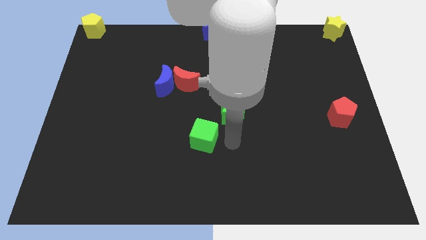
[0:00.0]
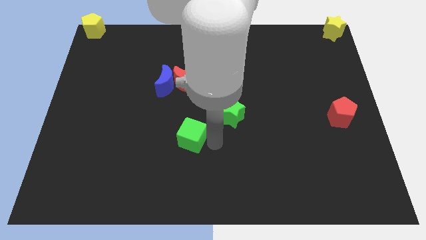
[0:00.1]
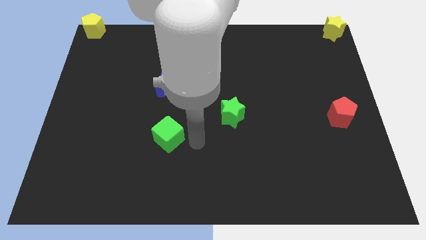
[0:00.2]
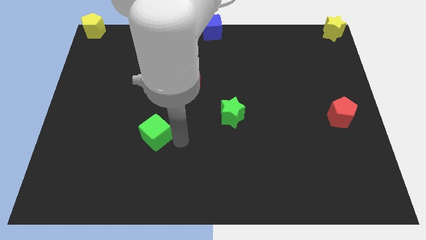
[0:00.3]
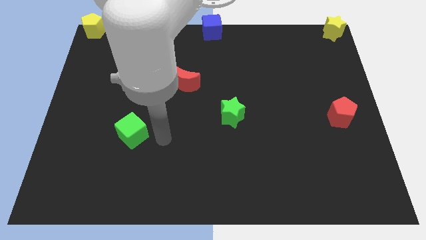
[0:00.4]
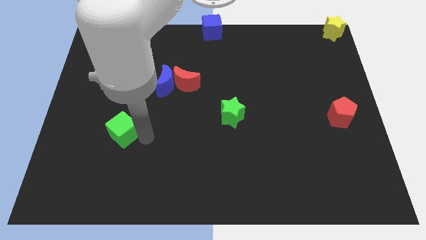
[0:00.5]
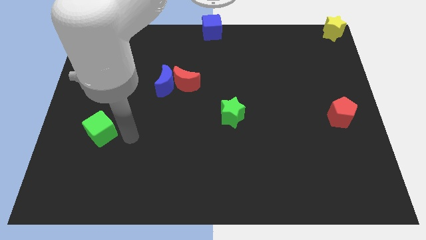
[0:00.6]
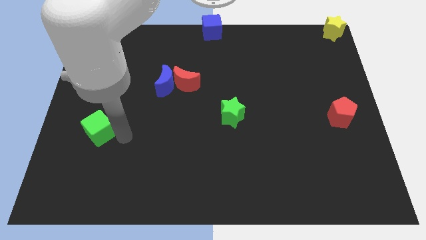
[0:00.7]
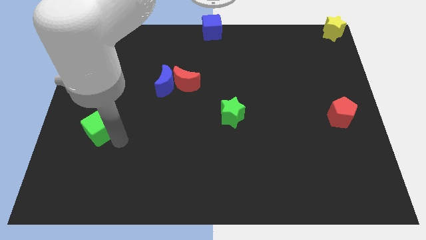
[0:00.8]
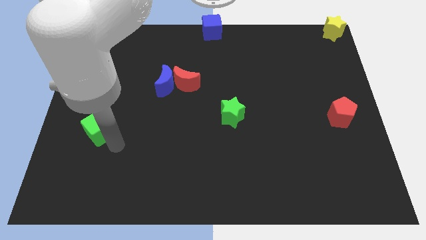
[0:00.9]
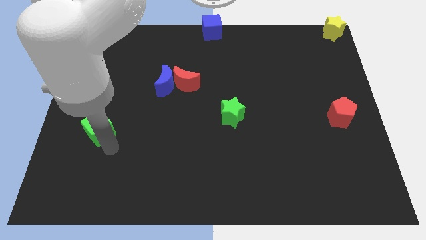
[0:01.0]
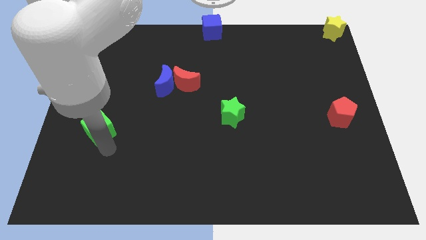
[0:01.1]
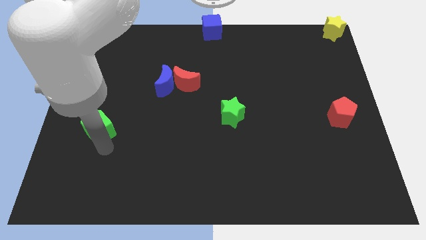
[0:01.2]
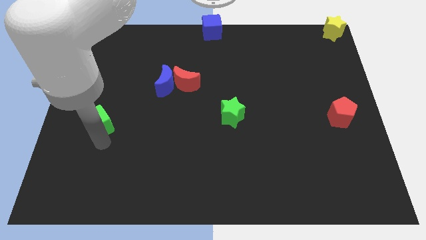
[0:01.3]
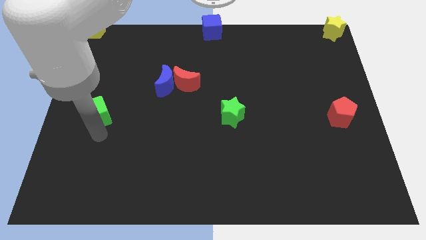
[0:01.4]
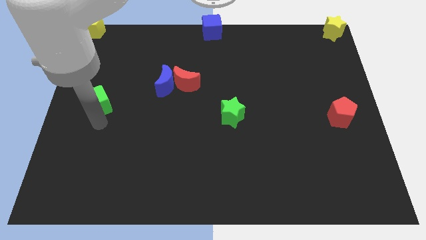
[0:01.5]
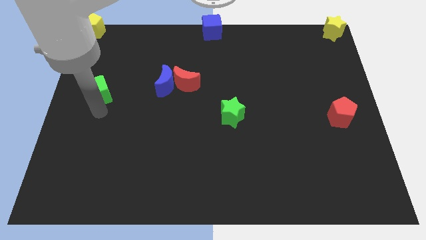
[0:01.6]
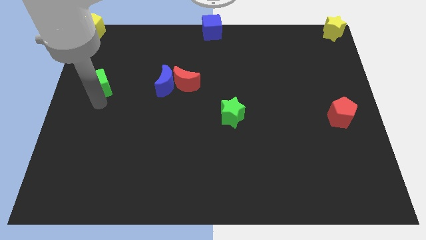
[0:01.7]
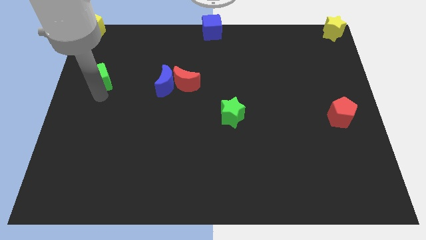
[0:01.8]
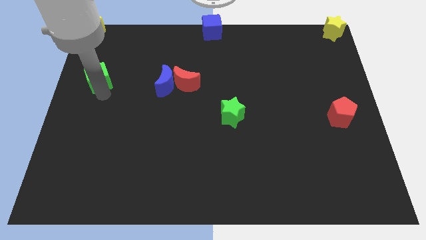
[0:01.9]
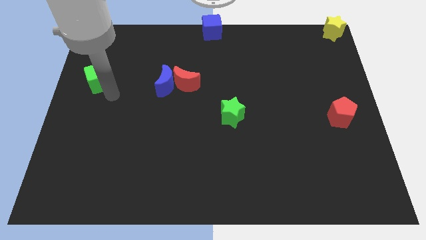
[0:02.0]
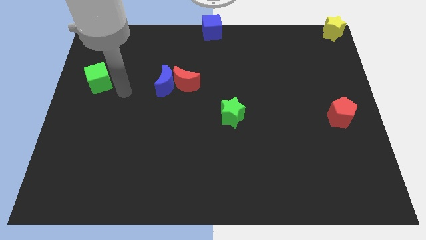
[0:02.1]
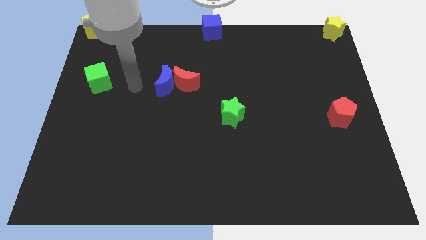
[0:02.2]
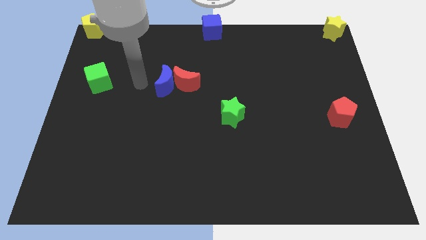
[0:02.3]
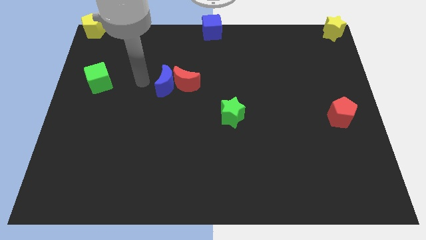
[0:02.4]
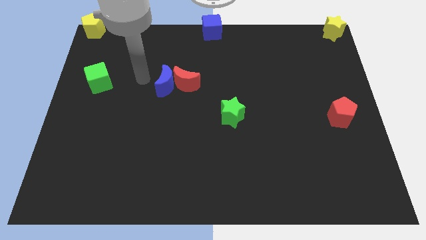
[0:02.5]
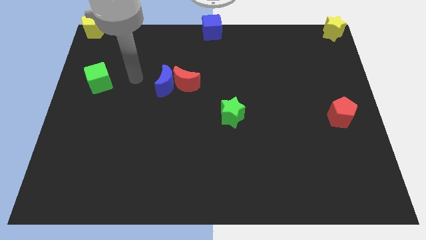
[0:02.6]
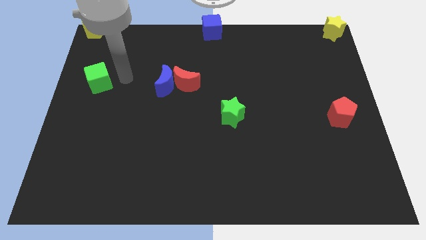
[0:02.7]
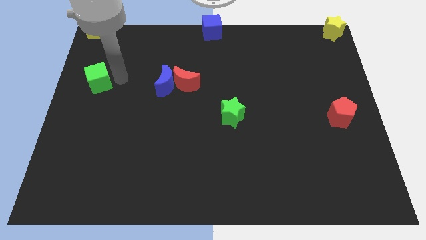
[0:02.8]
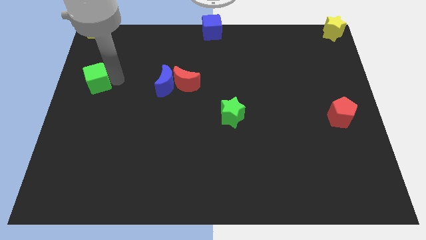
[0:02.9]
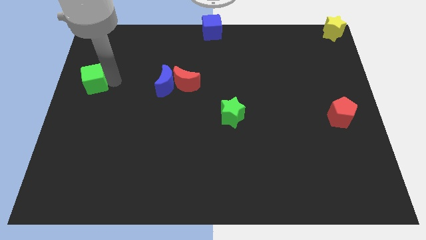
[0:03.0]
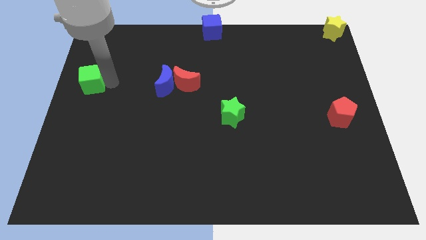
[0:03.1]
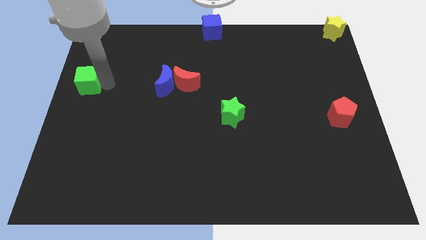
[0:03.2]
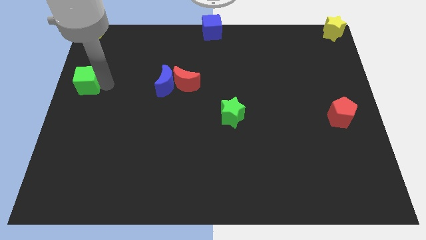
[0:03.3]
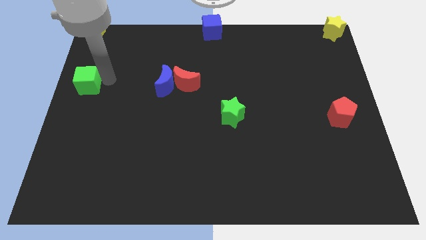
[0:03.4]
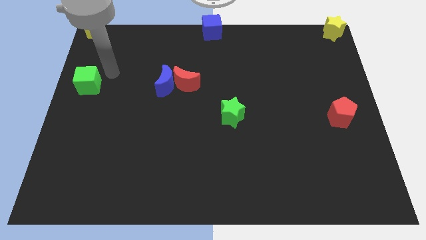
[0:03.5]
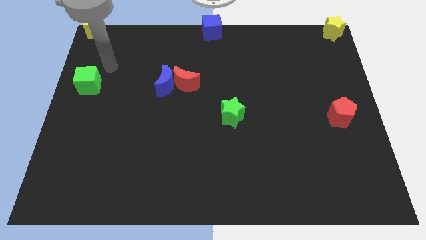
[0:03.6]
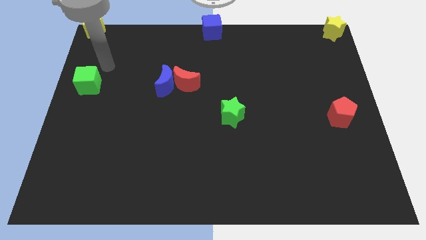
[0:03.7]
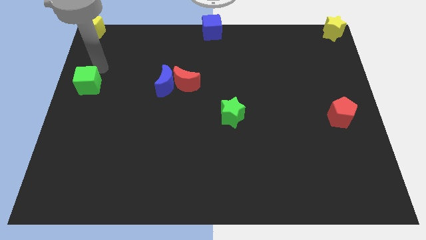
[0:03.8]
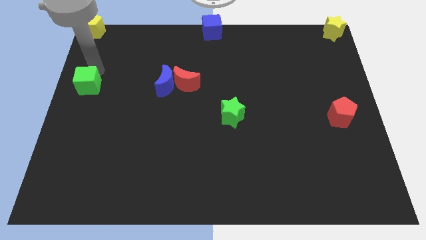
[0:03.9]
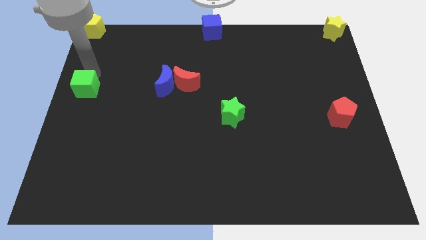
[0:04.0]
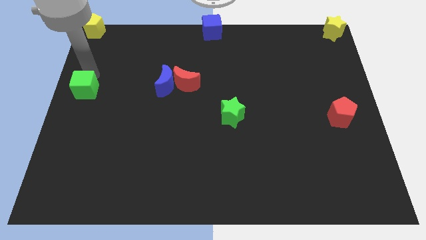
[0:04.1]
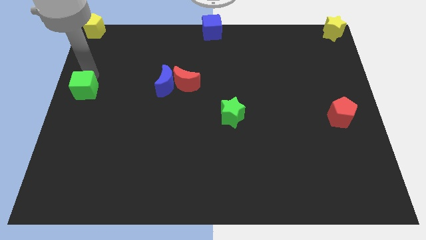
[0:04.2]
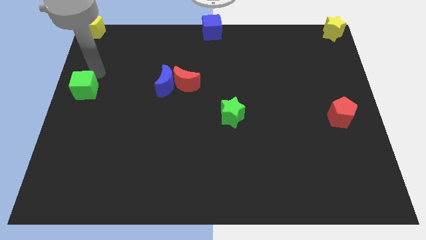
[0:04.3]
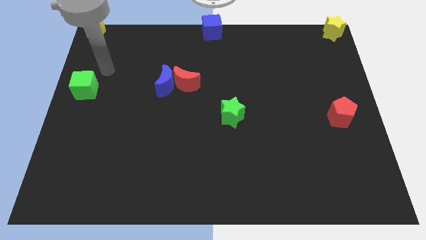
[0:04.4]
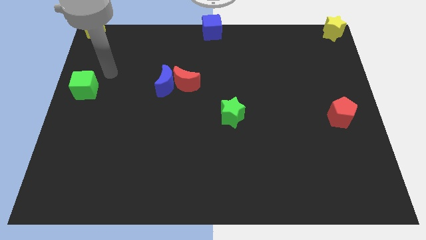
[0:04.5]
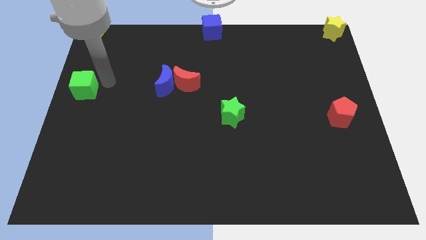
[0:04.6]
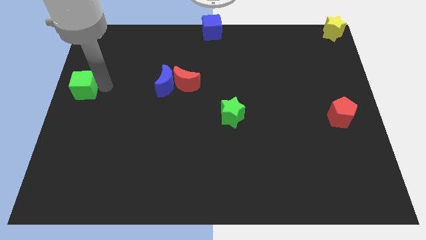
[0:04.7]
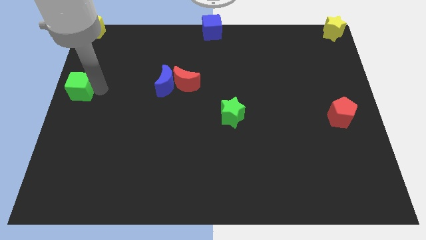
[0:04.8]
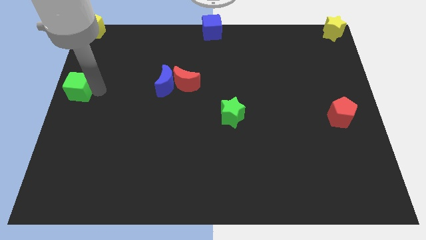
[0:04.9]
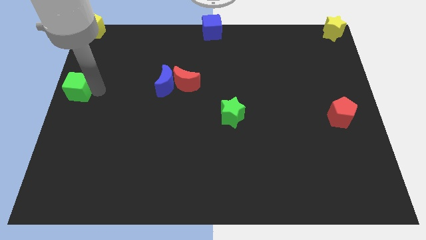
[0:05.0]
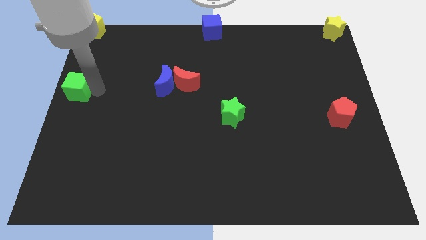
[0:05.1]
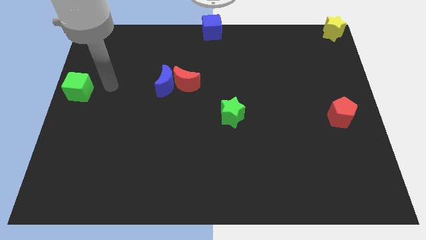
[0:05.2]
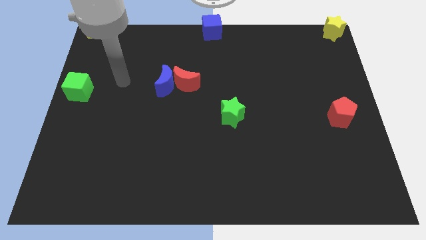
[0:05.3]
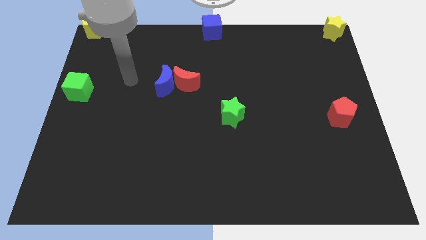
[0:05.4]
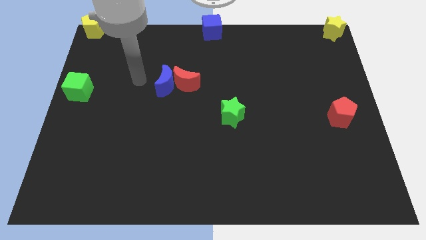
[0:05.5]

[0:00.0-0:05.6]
place the green cube to the middle left of the board

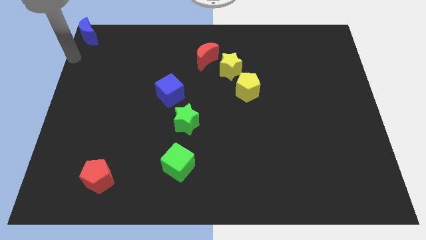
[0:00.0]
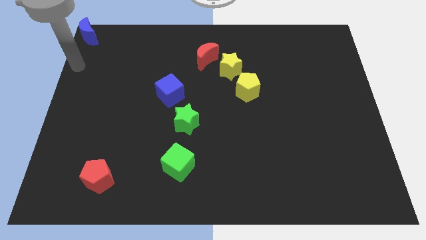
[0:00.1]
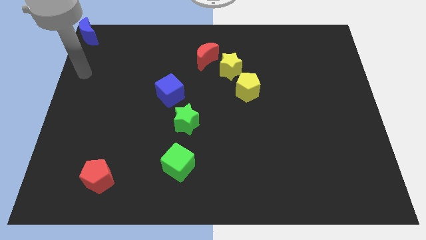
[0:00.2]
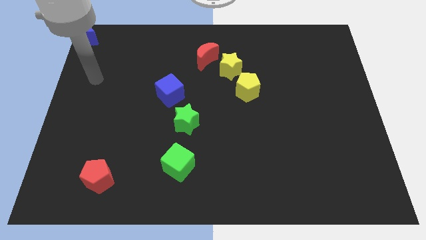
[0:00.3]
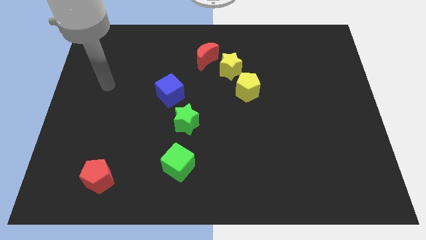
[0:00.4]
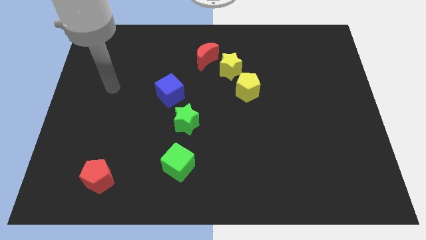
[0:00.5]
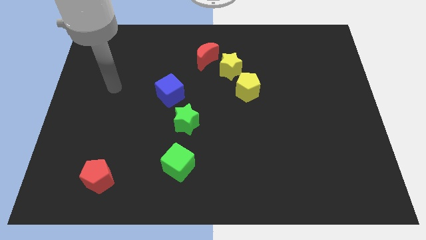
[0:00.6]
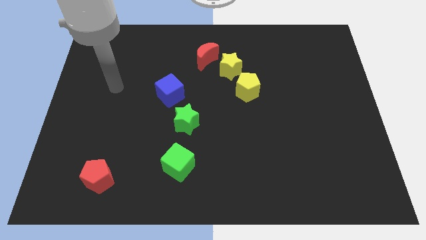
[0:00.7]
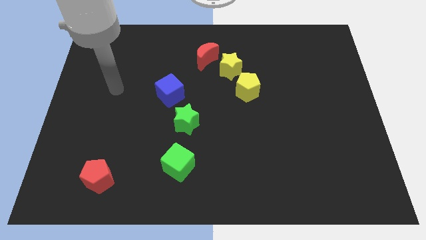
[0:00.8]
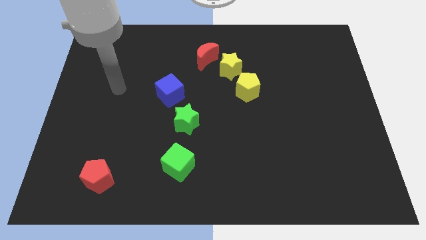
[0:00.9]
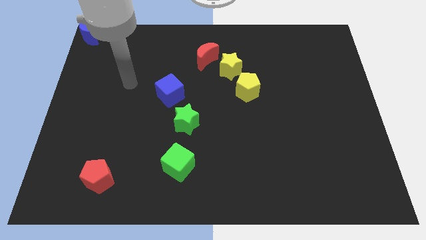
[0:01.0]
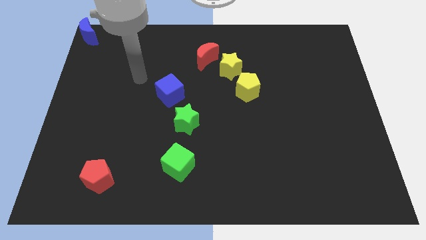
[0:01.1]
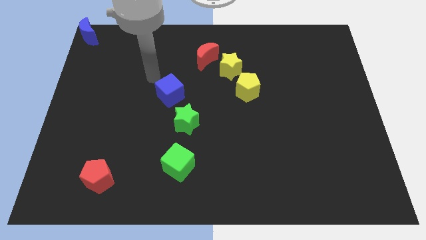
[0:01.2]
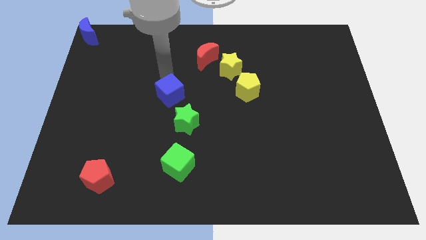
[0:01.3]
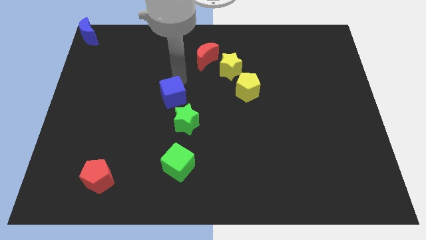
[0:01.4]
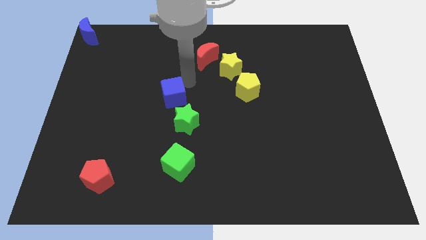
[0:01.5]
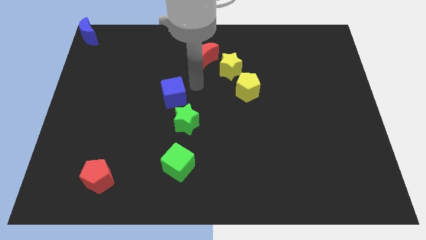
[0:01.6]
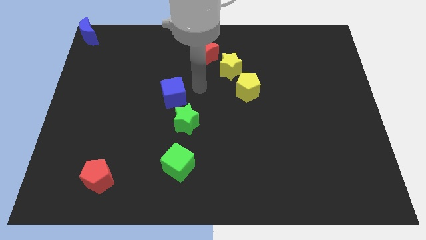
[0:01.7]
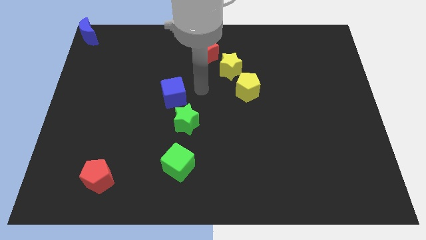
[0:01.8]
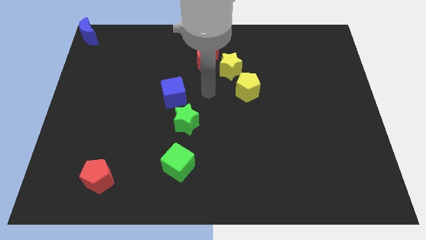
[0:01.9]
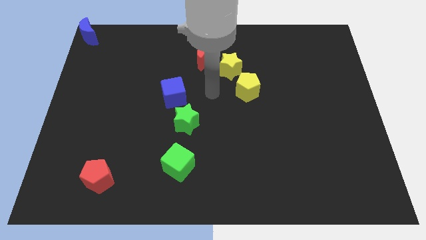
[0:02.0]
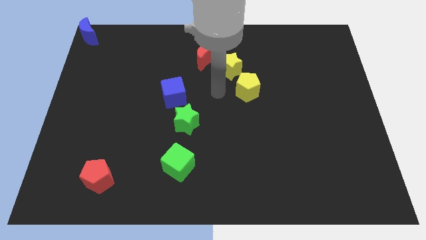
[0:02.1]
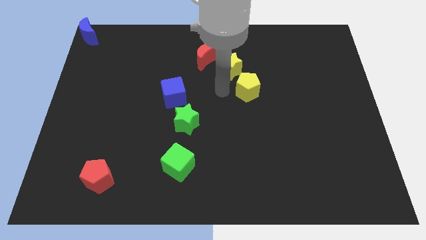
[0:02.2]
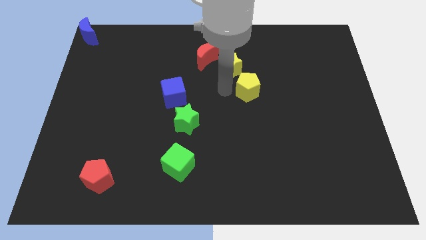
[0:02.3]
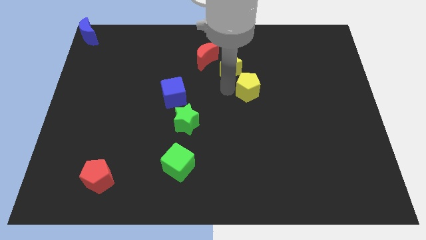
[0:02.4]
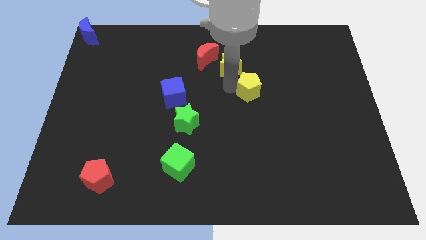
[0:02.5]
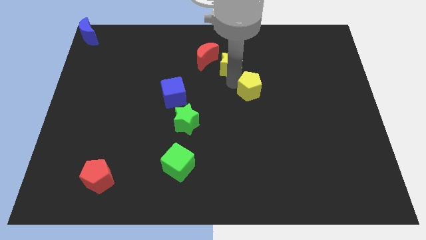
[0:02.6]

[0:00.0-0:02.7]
touch at the left side of the yellow pentagon

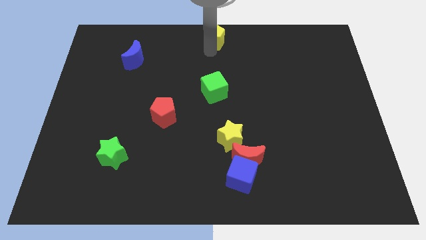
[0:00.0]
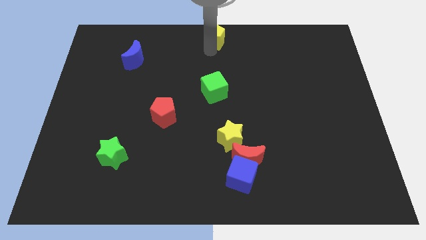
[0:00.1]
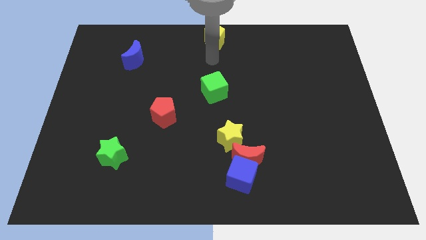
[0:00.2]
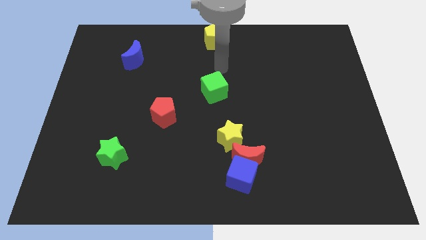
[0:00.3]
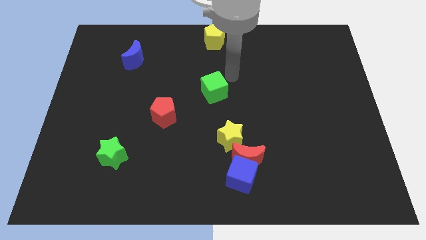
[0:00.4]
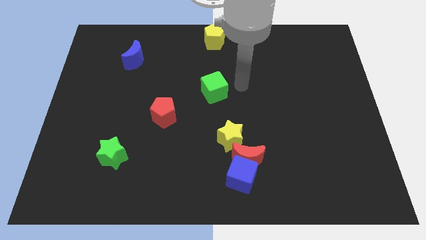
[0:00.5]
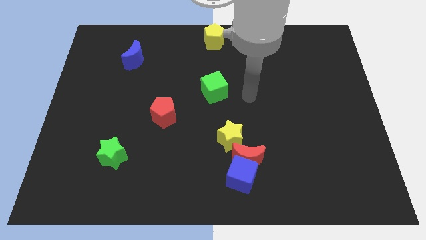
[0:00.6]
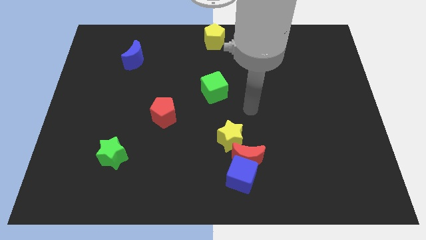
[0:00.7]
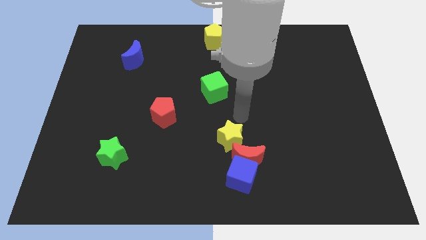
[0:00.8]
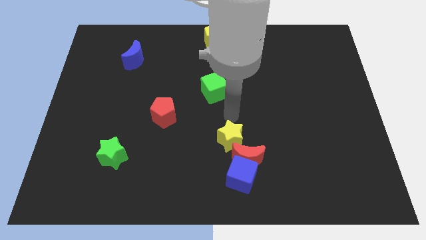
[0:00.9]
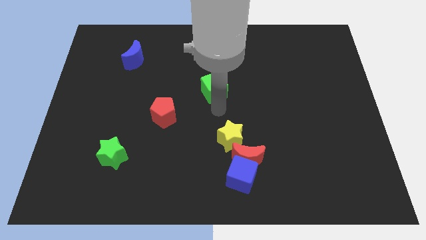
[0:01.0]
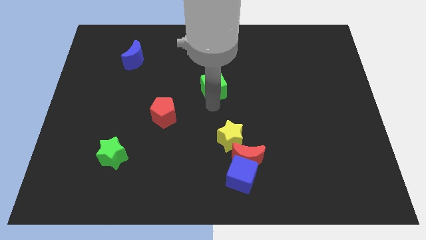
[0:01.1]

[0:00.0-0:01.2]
move your arm bottom side of the green cube
